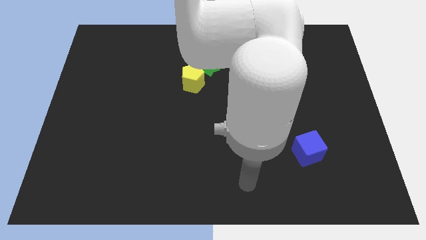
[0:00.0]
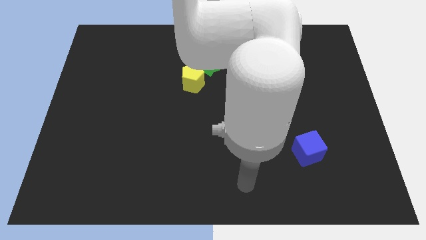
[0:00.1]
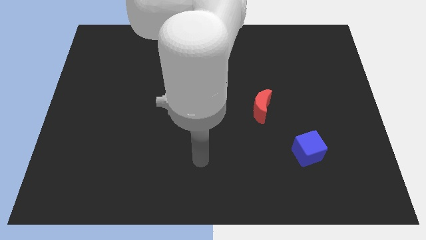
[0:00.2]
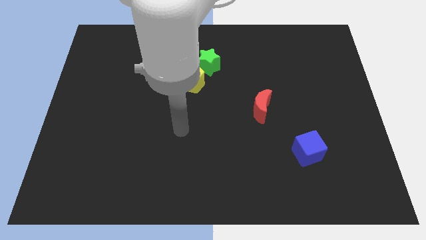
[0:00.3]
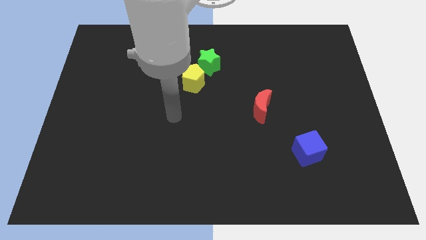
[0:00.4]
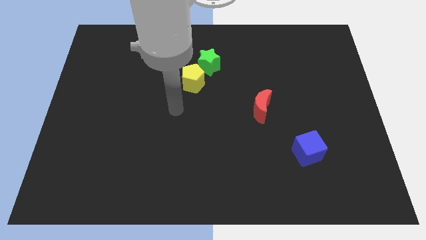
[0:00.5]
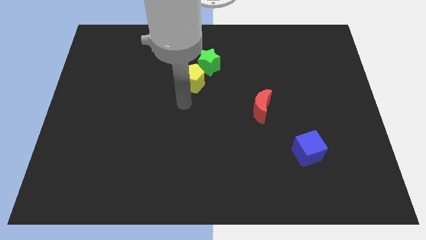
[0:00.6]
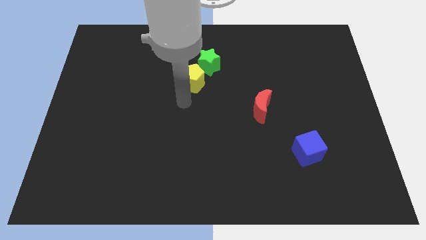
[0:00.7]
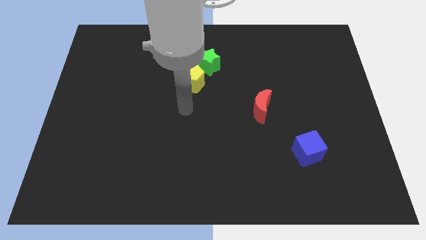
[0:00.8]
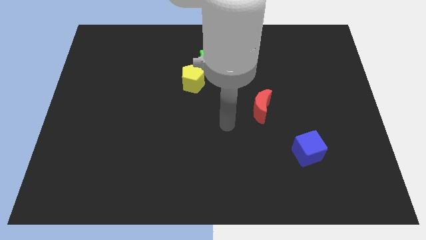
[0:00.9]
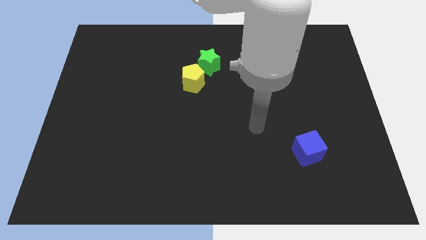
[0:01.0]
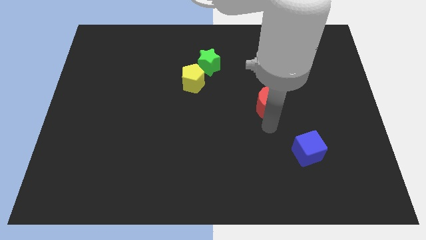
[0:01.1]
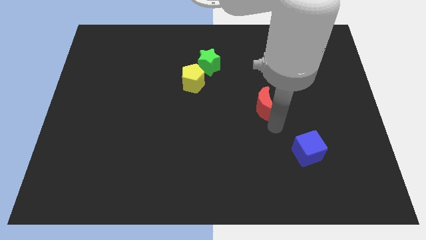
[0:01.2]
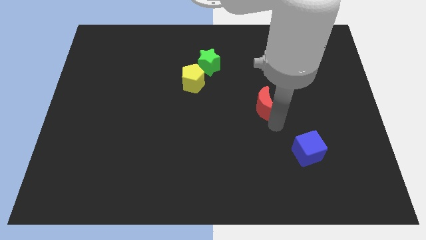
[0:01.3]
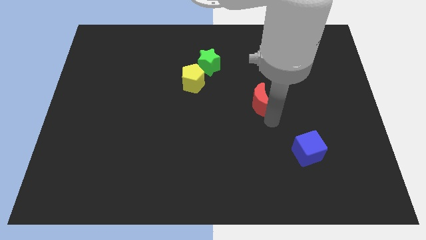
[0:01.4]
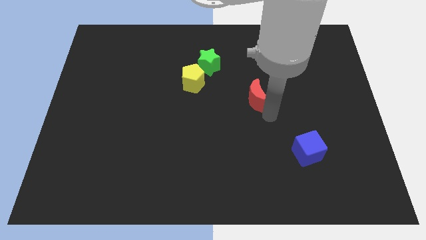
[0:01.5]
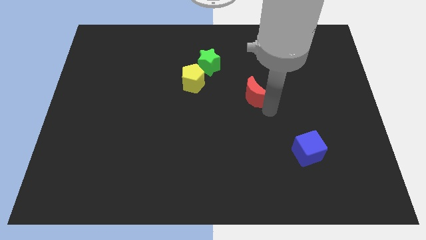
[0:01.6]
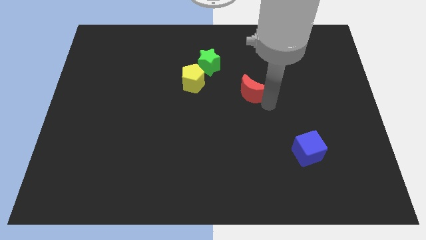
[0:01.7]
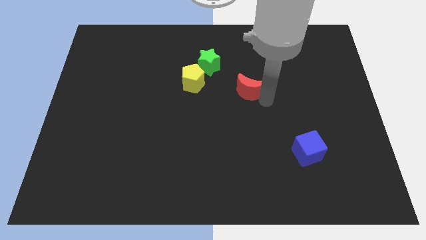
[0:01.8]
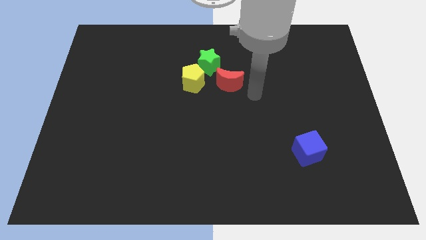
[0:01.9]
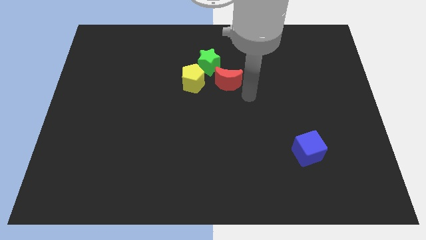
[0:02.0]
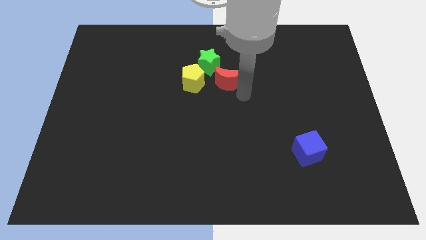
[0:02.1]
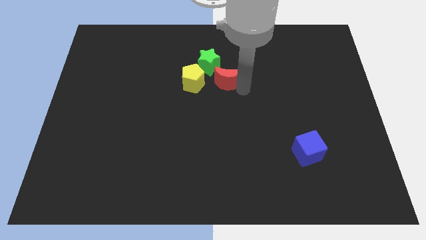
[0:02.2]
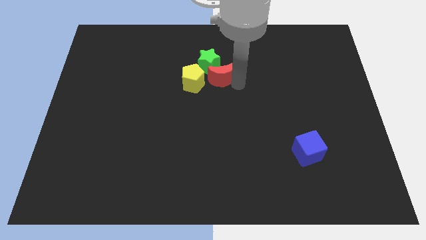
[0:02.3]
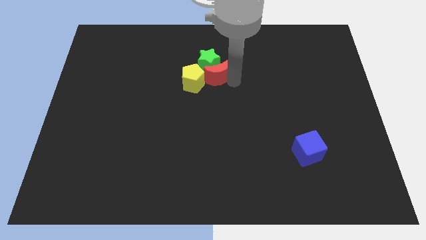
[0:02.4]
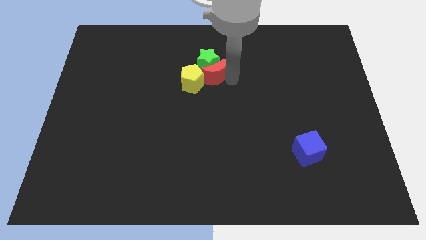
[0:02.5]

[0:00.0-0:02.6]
put the red block next to the star

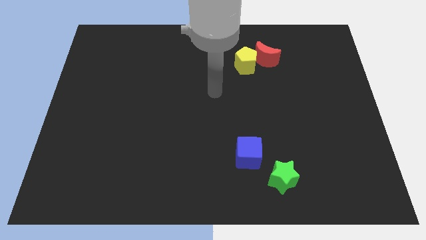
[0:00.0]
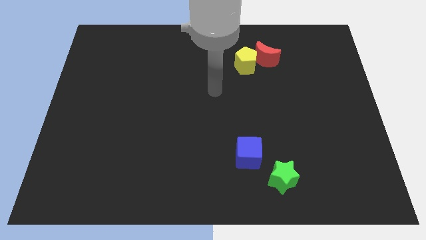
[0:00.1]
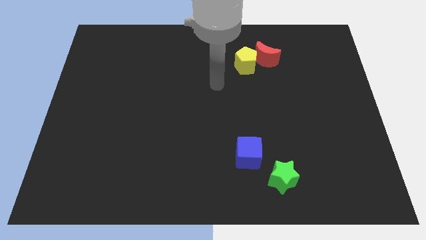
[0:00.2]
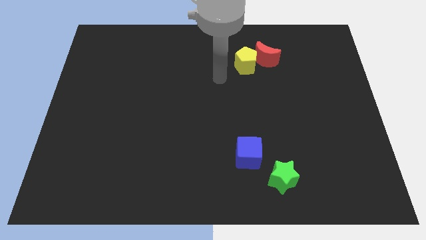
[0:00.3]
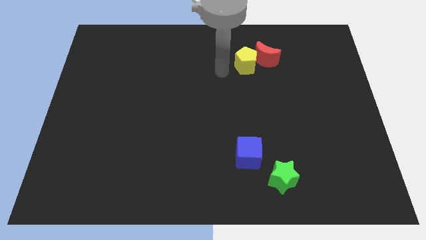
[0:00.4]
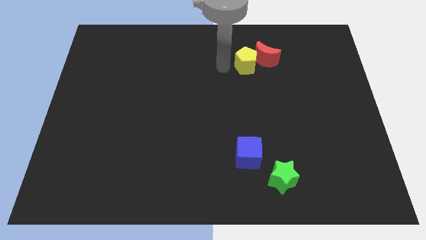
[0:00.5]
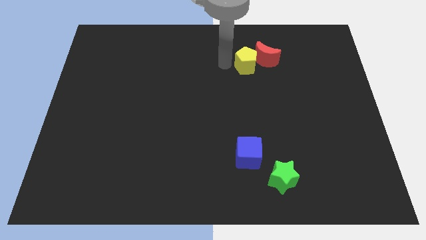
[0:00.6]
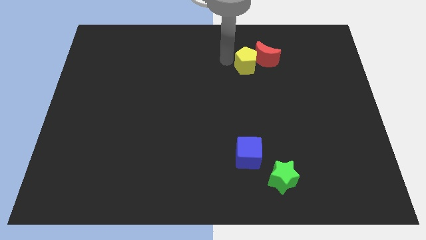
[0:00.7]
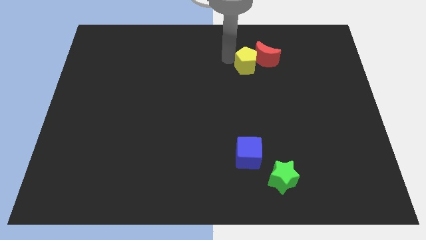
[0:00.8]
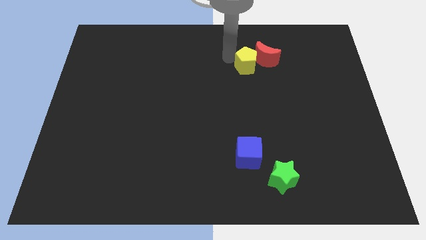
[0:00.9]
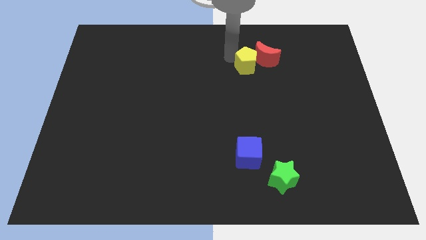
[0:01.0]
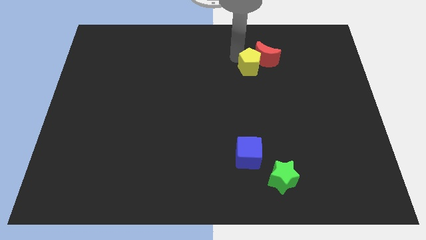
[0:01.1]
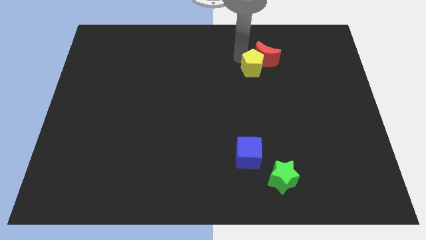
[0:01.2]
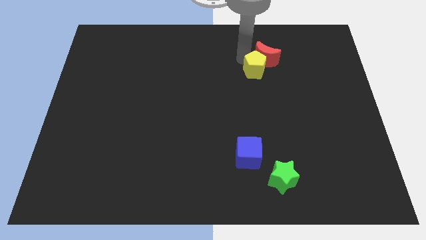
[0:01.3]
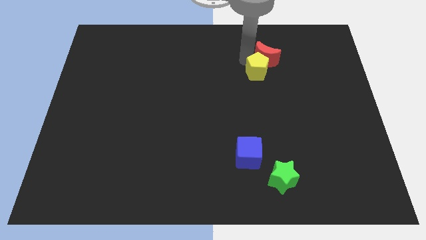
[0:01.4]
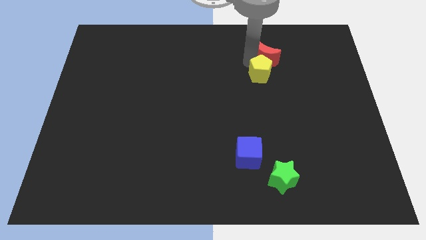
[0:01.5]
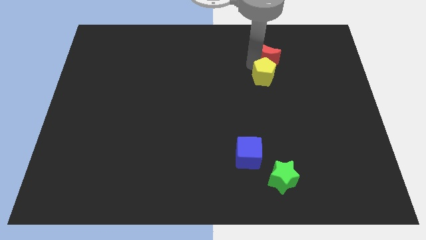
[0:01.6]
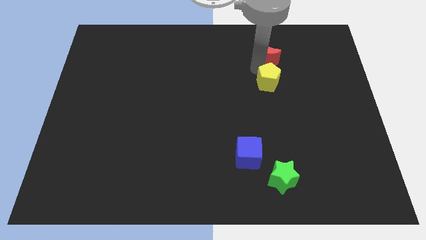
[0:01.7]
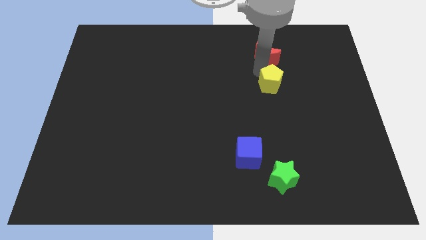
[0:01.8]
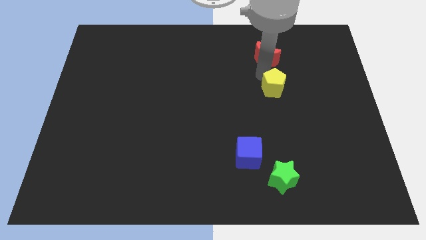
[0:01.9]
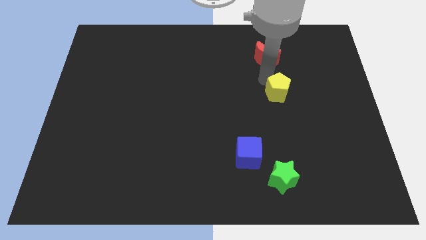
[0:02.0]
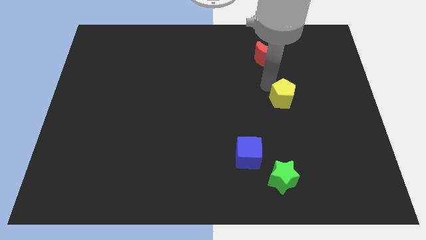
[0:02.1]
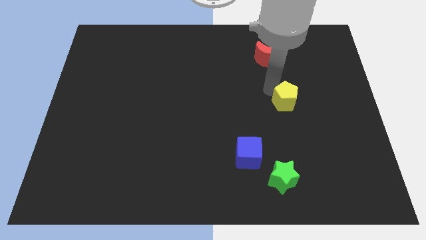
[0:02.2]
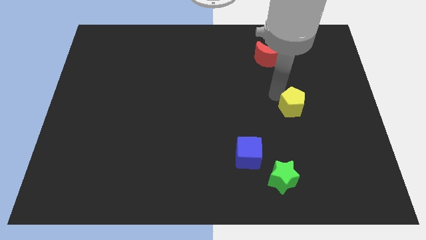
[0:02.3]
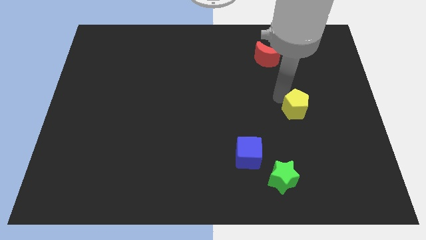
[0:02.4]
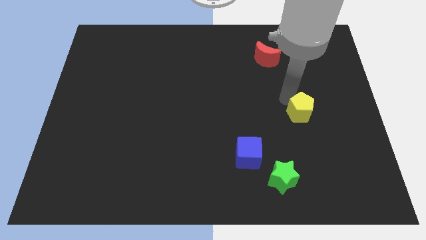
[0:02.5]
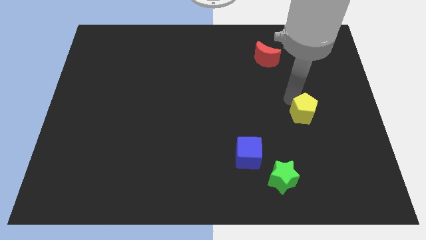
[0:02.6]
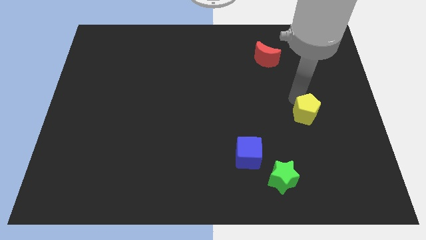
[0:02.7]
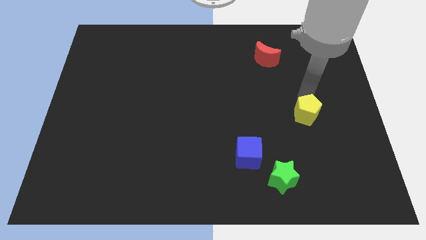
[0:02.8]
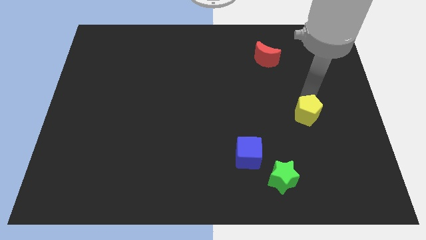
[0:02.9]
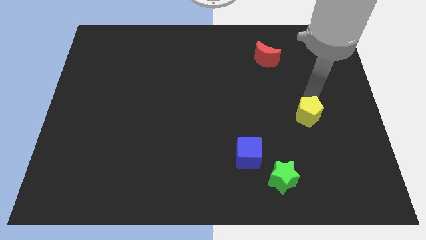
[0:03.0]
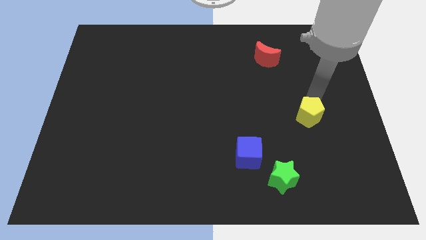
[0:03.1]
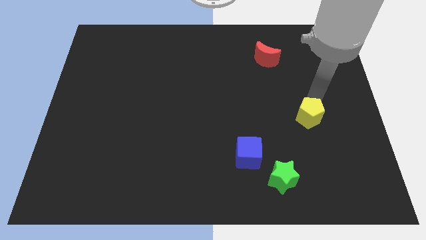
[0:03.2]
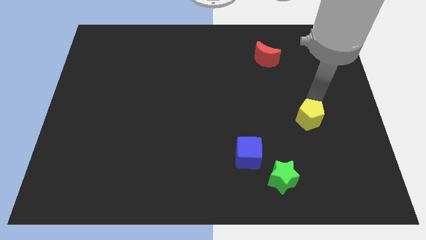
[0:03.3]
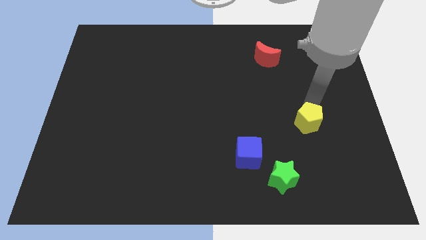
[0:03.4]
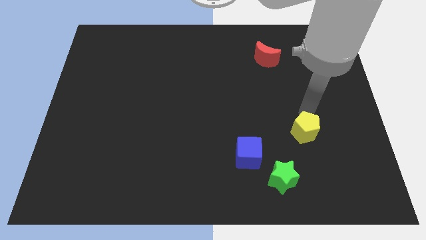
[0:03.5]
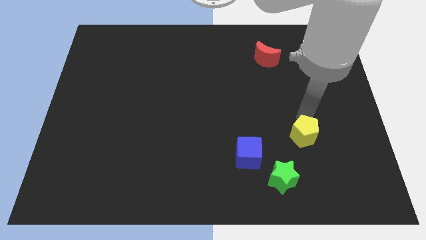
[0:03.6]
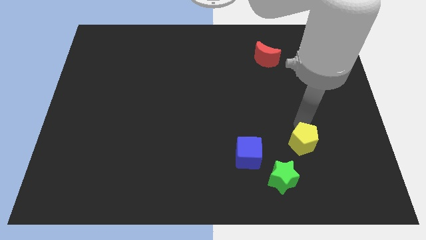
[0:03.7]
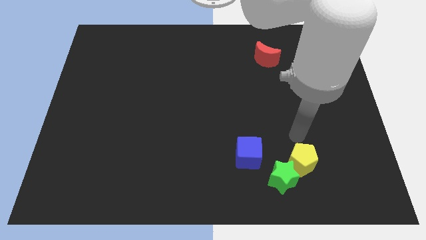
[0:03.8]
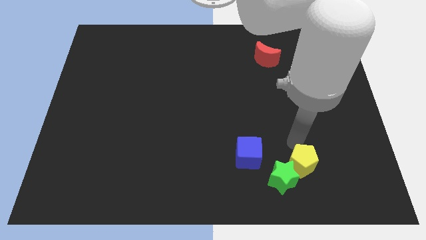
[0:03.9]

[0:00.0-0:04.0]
move the yellow block close to the green star

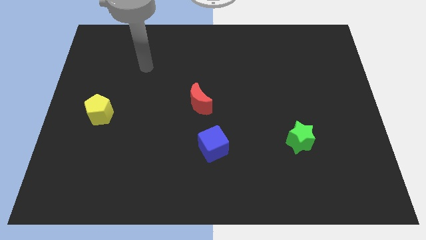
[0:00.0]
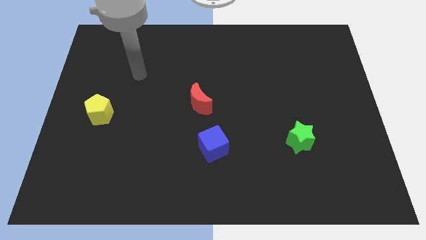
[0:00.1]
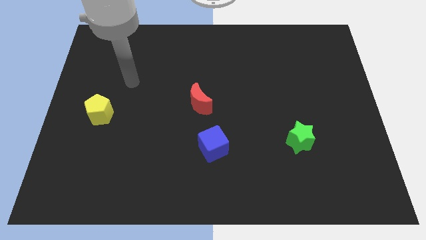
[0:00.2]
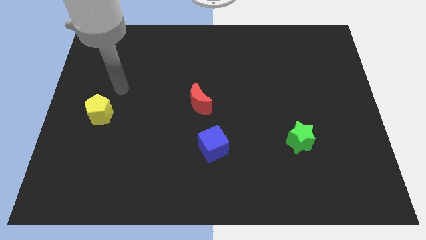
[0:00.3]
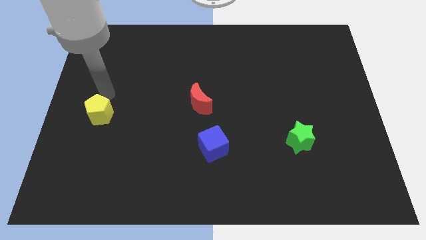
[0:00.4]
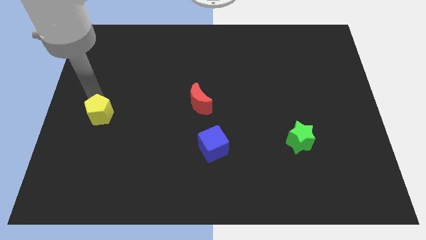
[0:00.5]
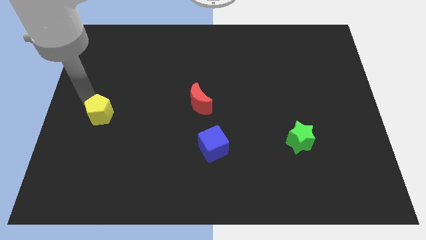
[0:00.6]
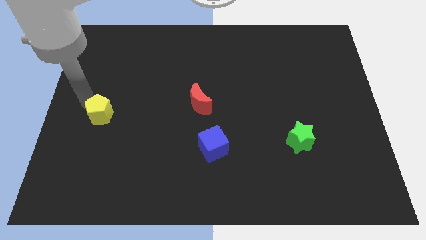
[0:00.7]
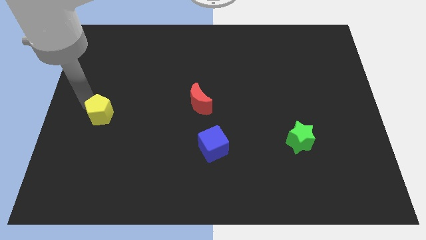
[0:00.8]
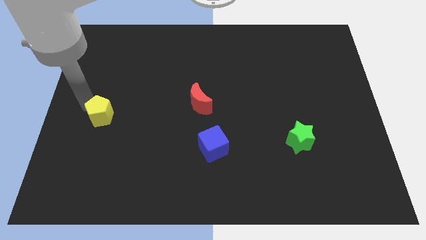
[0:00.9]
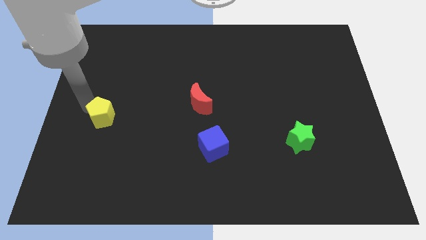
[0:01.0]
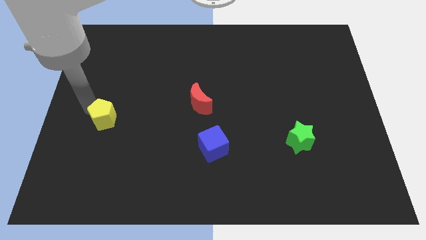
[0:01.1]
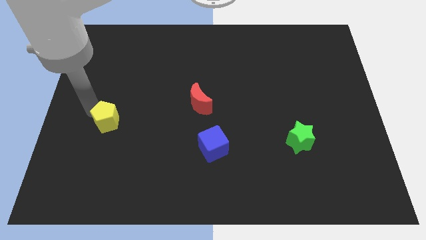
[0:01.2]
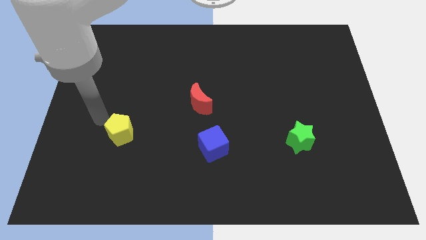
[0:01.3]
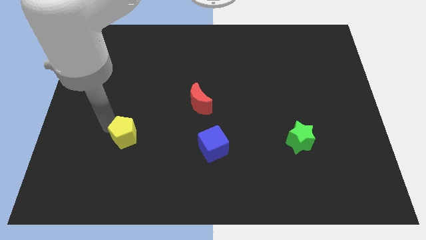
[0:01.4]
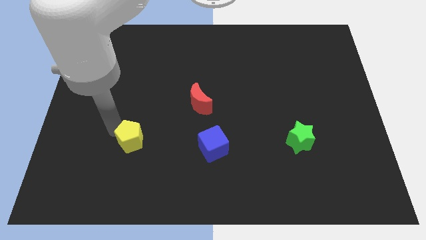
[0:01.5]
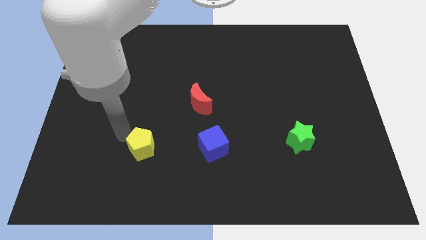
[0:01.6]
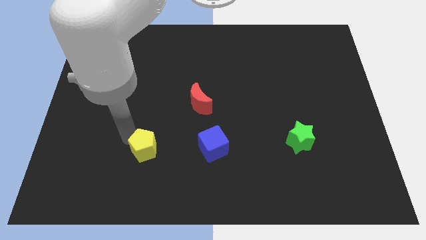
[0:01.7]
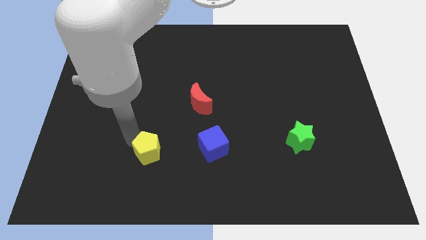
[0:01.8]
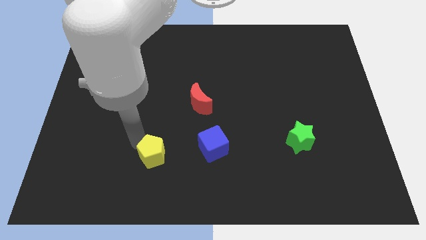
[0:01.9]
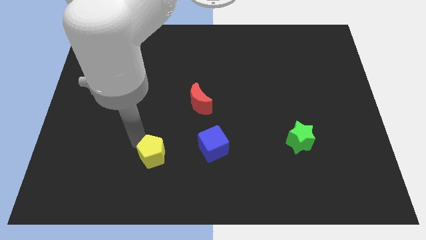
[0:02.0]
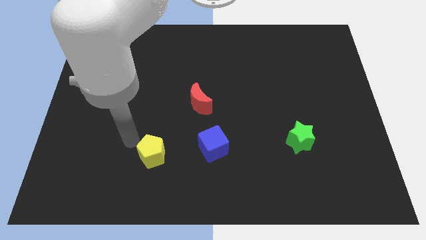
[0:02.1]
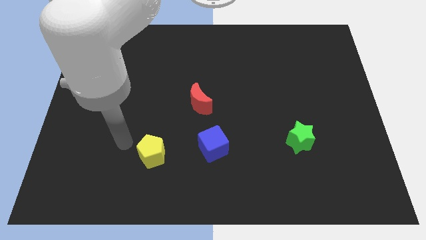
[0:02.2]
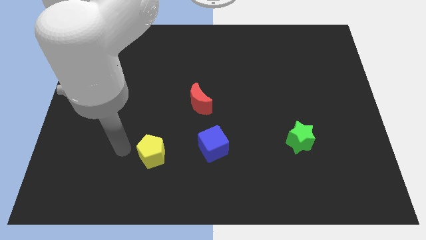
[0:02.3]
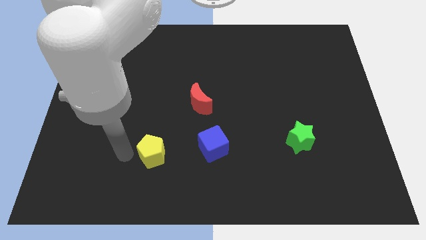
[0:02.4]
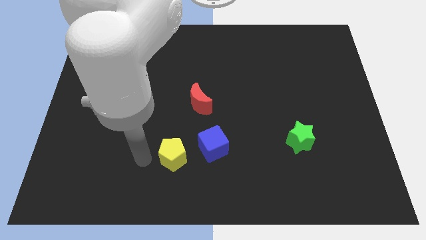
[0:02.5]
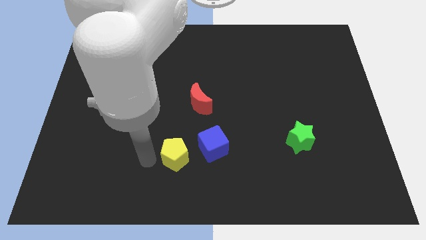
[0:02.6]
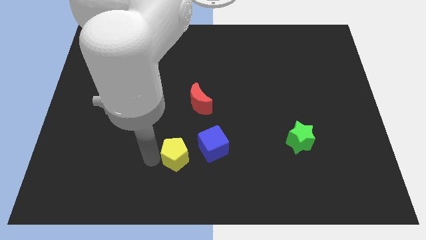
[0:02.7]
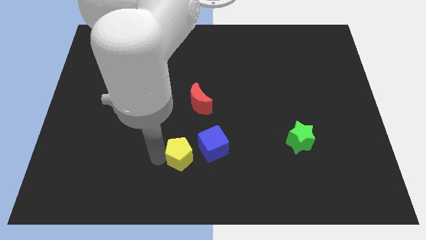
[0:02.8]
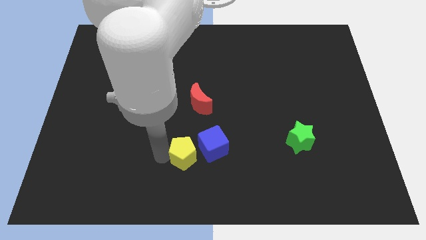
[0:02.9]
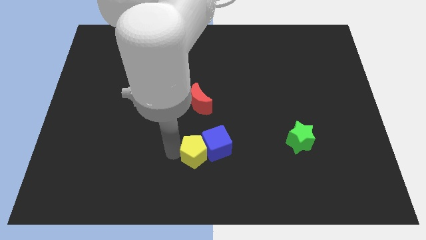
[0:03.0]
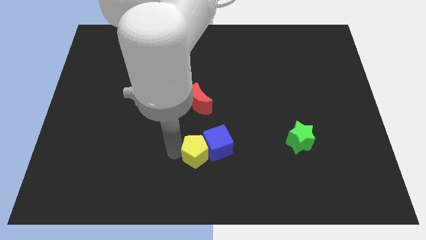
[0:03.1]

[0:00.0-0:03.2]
move the yellow block to the blue block
